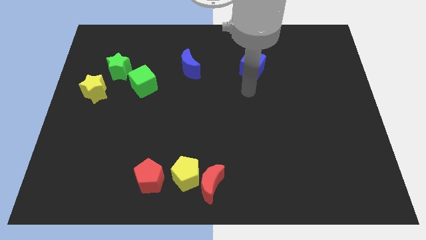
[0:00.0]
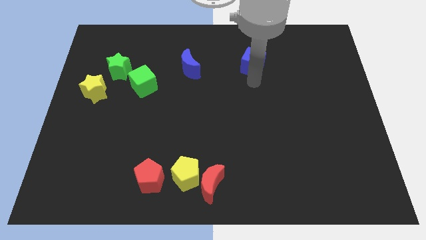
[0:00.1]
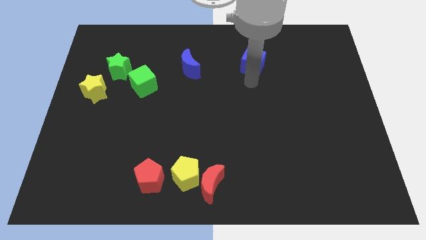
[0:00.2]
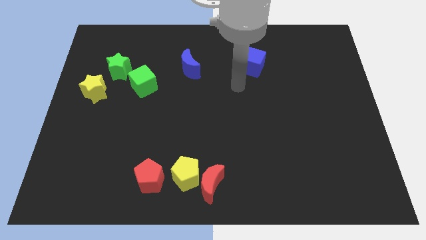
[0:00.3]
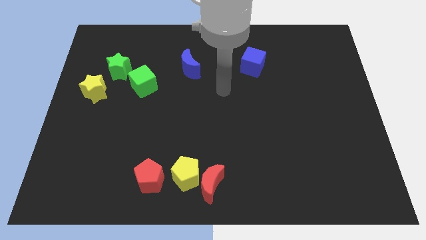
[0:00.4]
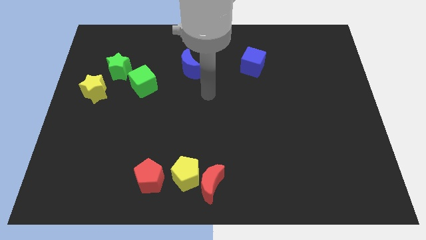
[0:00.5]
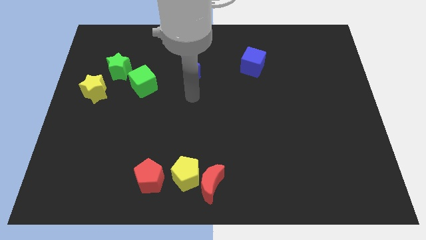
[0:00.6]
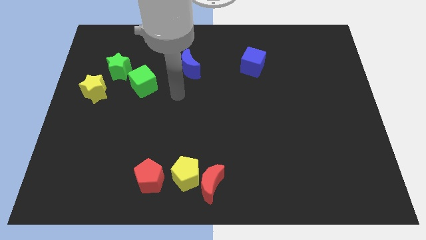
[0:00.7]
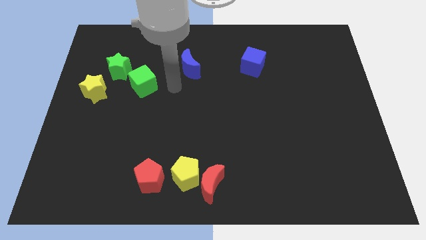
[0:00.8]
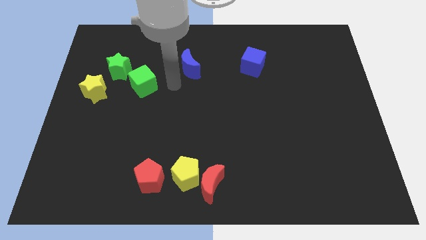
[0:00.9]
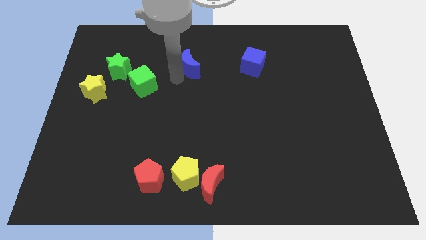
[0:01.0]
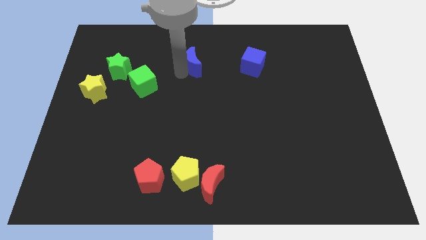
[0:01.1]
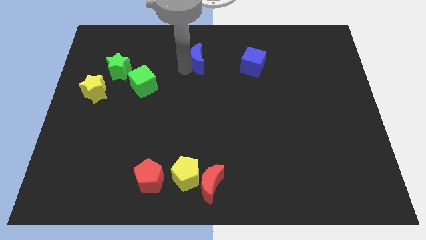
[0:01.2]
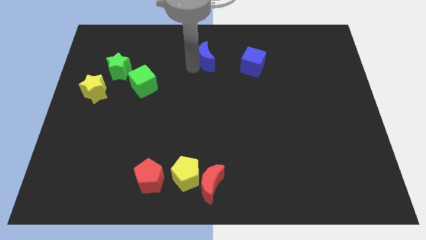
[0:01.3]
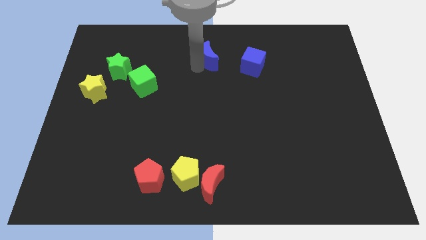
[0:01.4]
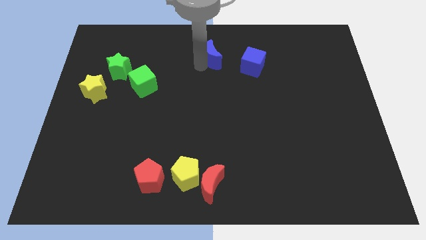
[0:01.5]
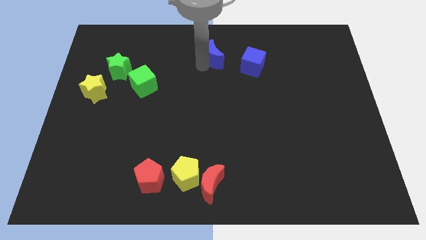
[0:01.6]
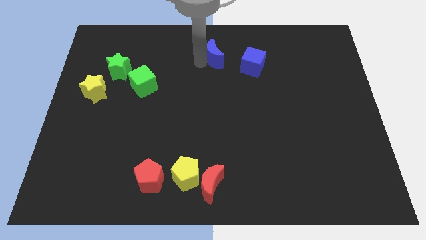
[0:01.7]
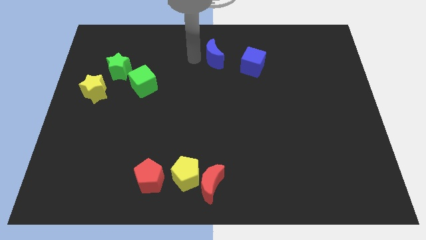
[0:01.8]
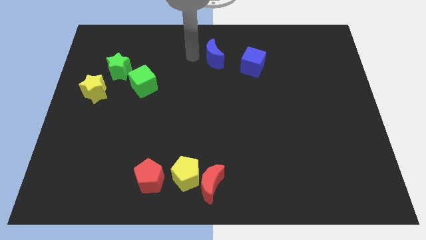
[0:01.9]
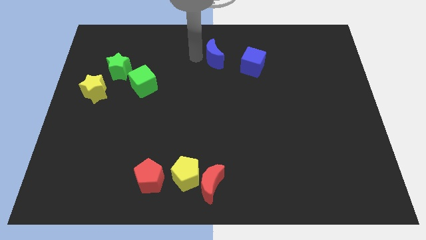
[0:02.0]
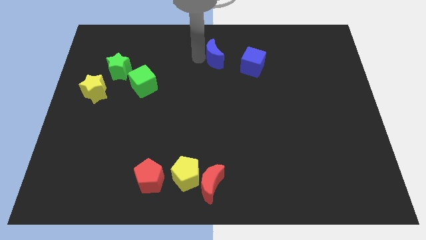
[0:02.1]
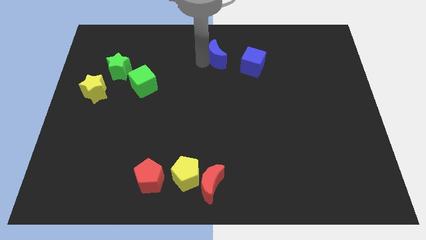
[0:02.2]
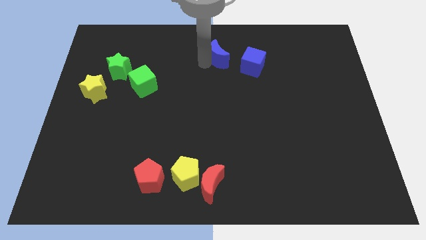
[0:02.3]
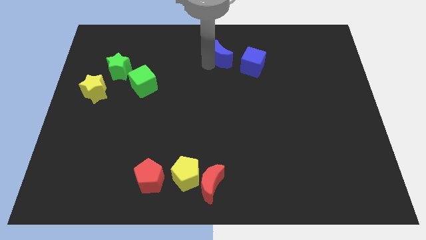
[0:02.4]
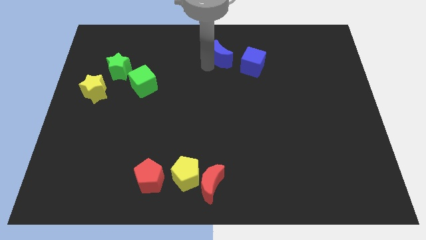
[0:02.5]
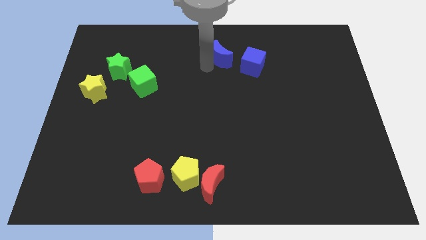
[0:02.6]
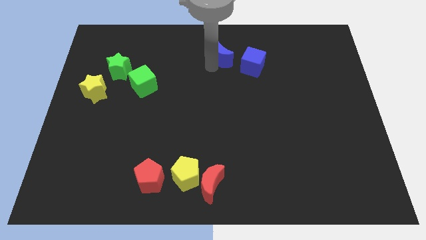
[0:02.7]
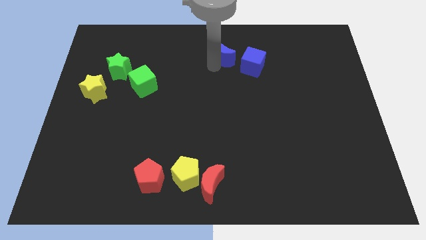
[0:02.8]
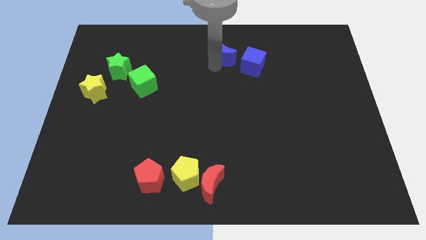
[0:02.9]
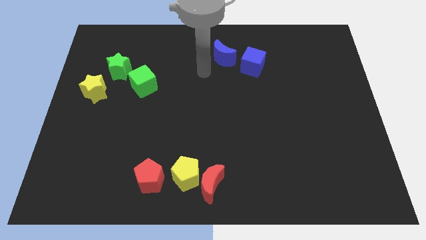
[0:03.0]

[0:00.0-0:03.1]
push the blue crescent to the left of the blue cube

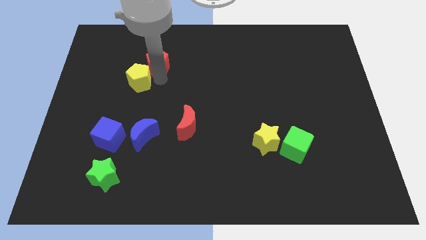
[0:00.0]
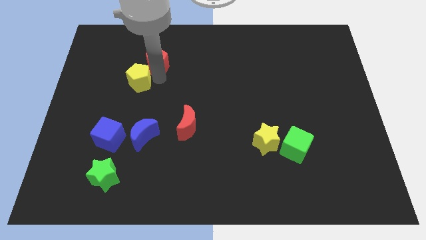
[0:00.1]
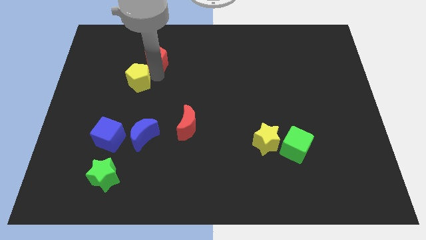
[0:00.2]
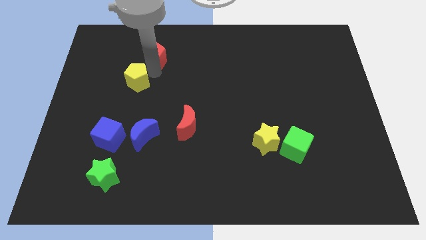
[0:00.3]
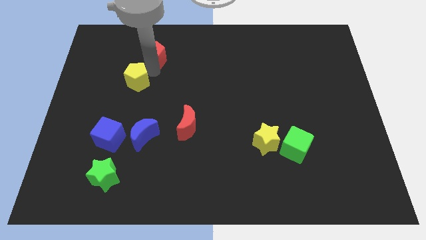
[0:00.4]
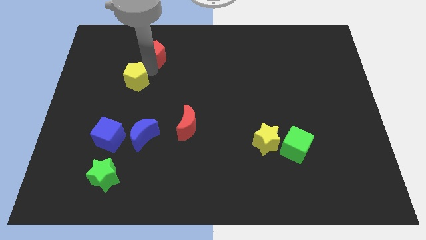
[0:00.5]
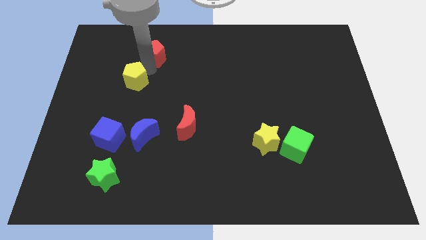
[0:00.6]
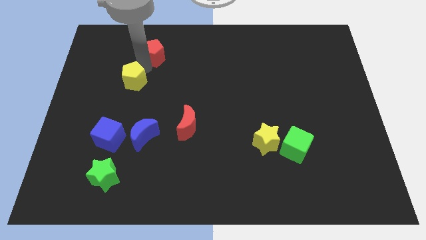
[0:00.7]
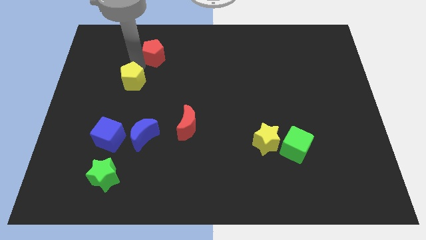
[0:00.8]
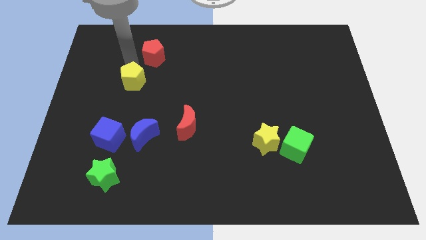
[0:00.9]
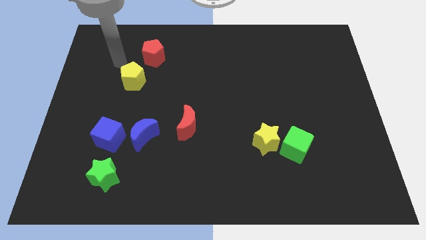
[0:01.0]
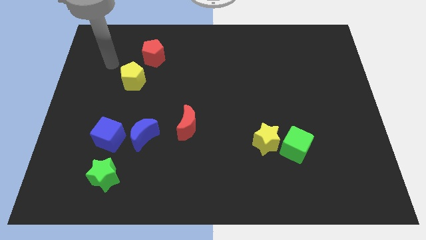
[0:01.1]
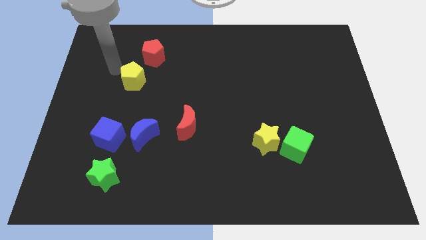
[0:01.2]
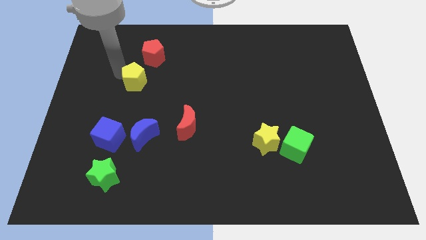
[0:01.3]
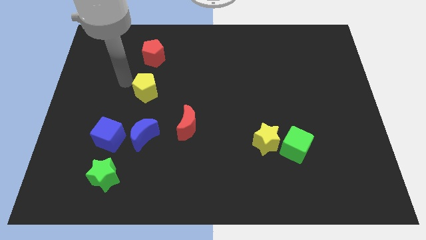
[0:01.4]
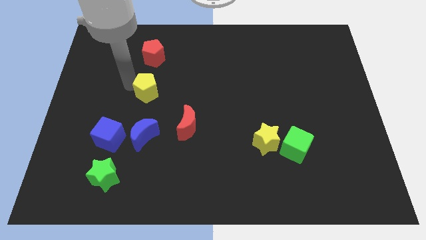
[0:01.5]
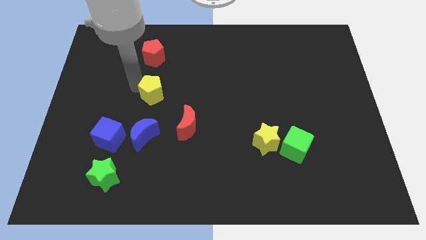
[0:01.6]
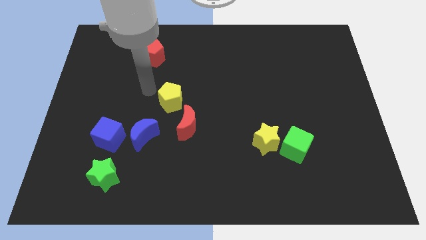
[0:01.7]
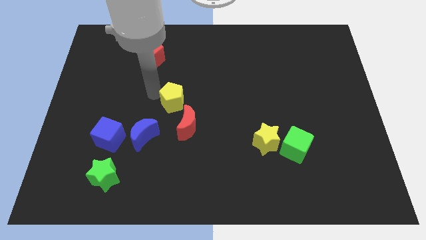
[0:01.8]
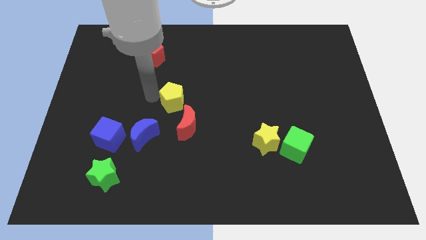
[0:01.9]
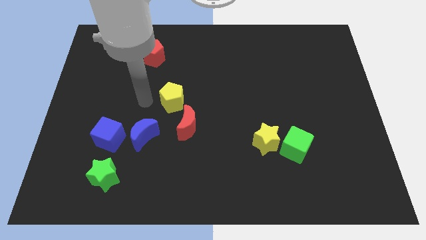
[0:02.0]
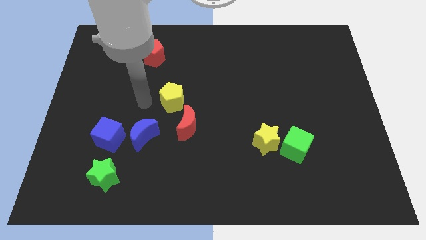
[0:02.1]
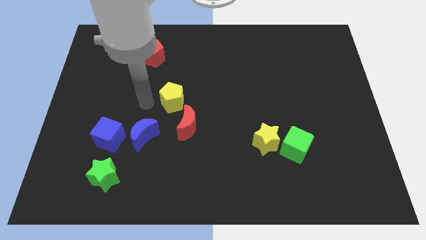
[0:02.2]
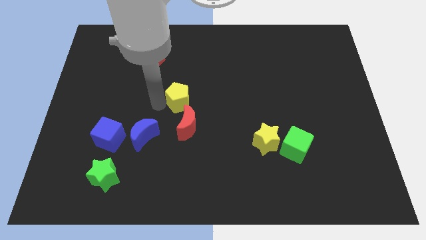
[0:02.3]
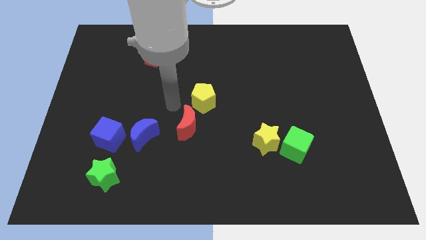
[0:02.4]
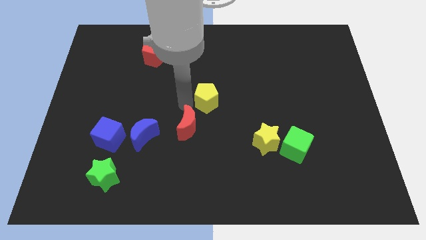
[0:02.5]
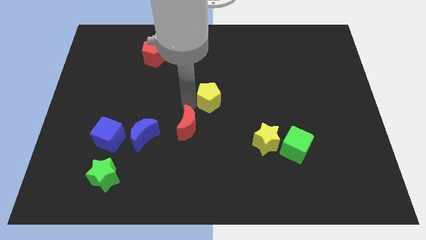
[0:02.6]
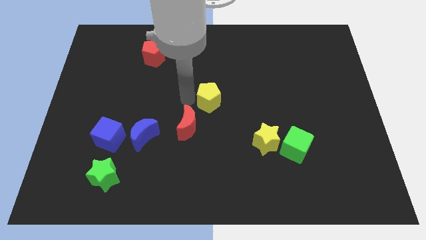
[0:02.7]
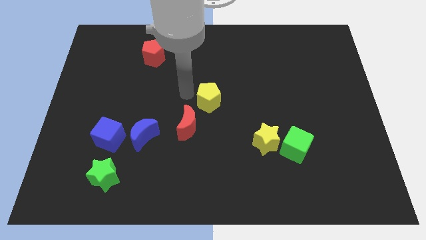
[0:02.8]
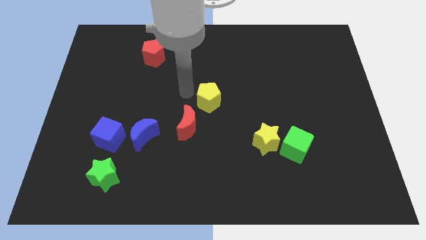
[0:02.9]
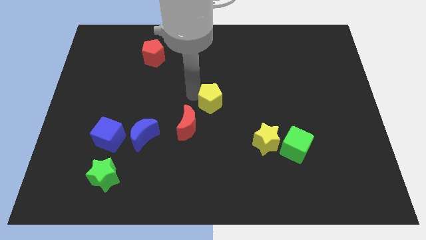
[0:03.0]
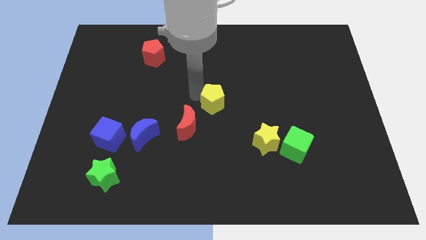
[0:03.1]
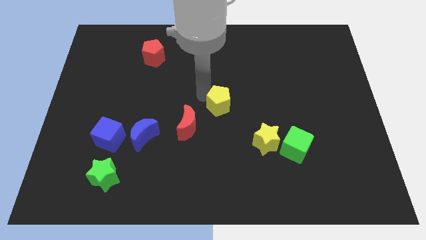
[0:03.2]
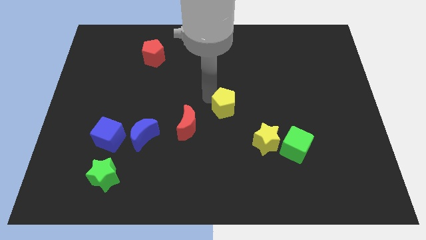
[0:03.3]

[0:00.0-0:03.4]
move the yellow pentagon to the center of the board

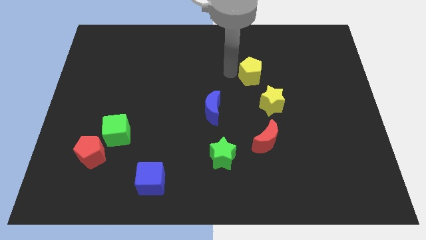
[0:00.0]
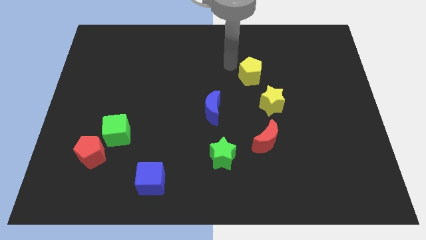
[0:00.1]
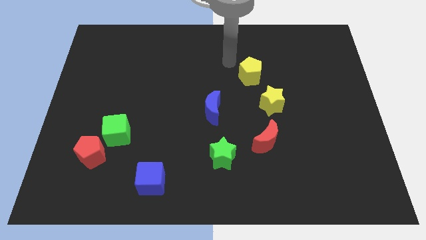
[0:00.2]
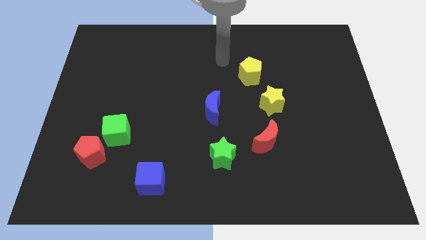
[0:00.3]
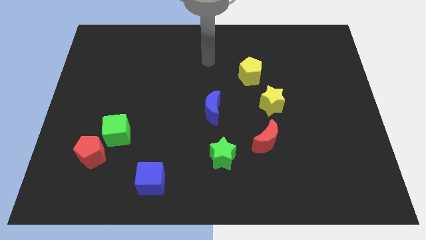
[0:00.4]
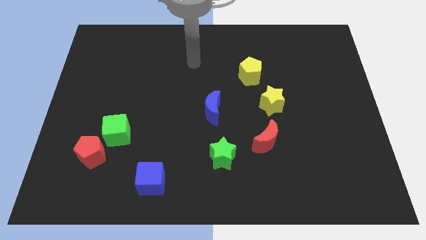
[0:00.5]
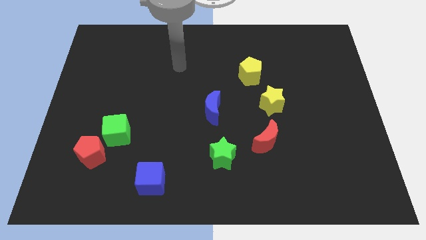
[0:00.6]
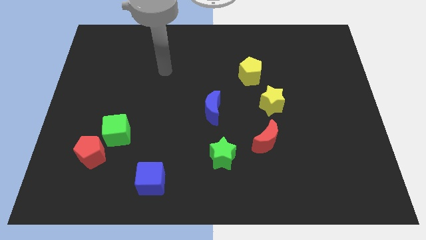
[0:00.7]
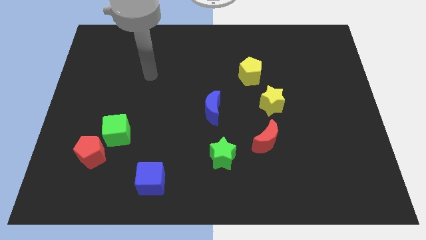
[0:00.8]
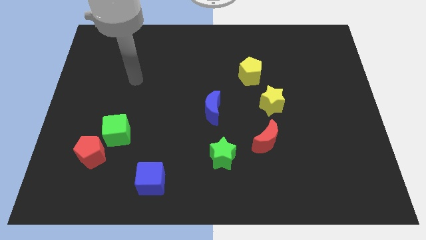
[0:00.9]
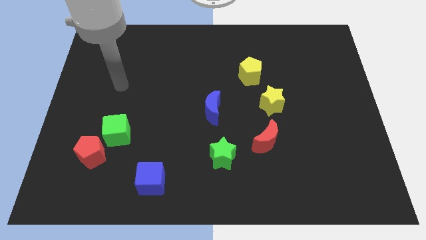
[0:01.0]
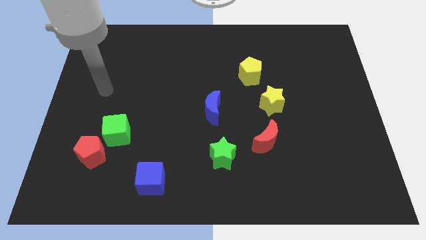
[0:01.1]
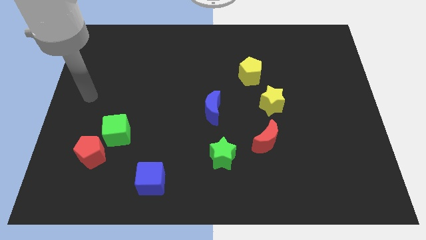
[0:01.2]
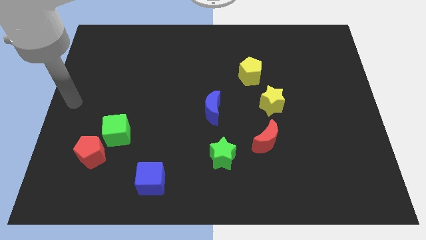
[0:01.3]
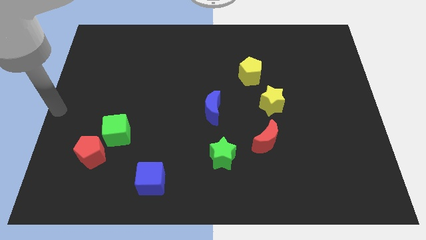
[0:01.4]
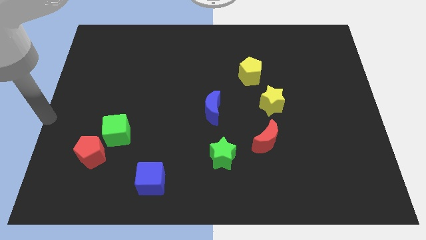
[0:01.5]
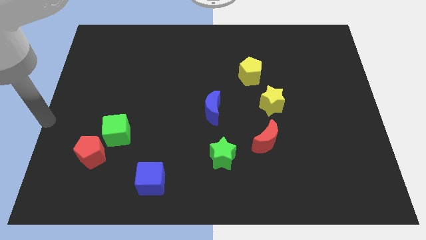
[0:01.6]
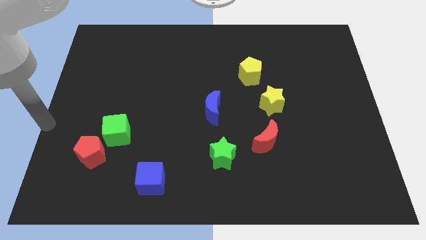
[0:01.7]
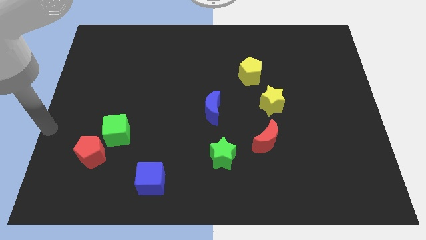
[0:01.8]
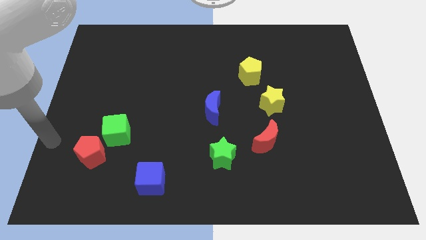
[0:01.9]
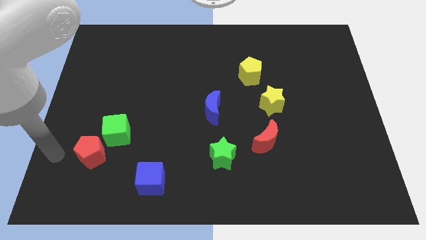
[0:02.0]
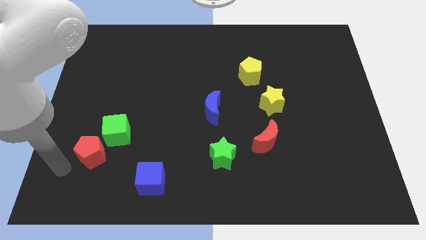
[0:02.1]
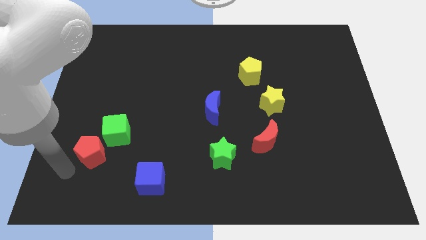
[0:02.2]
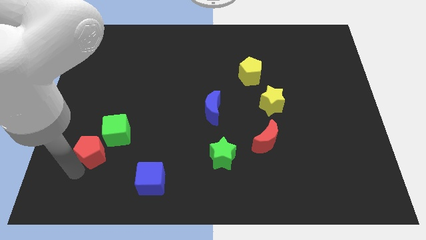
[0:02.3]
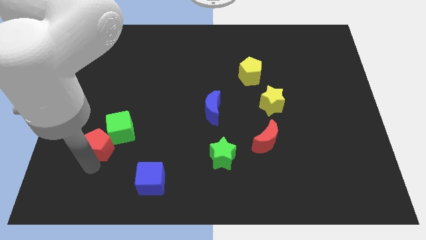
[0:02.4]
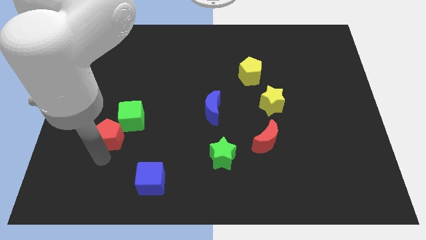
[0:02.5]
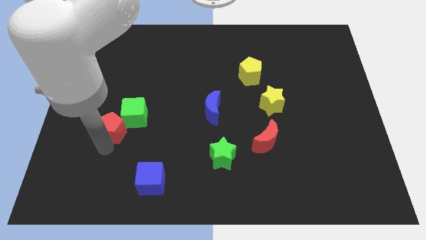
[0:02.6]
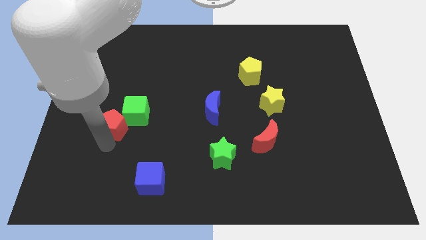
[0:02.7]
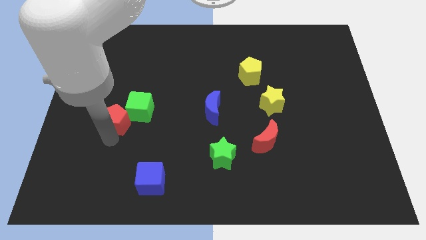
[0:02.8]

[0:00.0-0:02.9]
push the red pentagon up slightly
